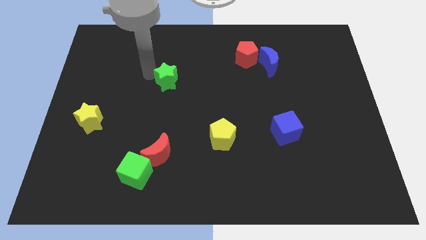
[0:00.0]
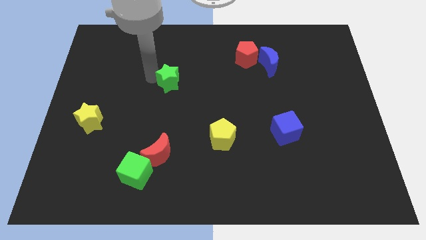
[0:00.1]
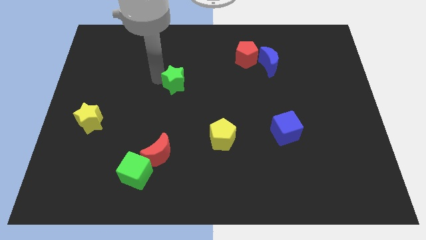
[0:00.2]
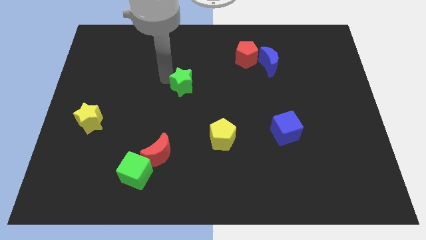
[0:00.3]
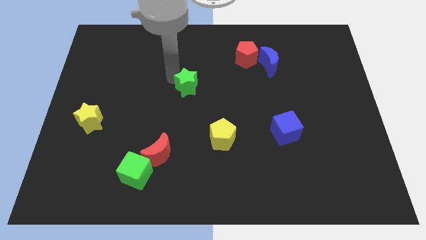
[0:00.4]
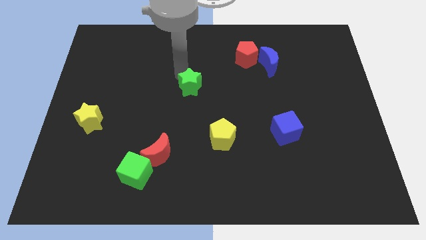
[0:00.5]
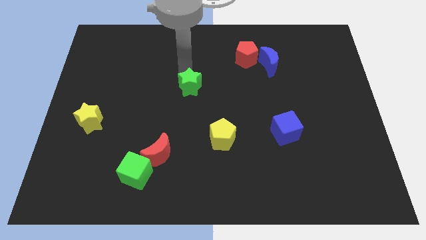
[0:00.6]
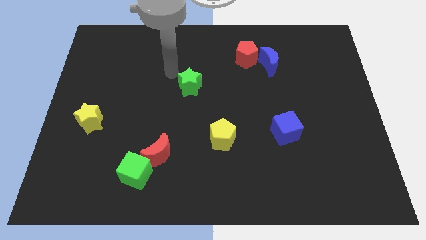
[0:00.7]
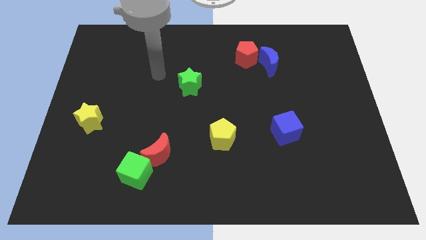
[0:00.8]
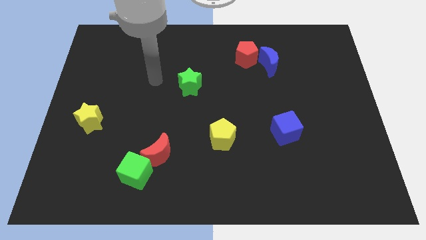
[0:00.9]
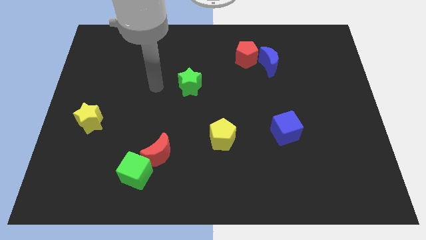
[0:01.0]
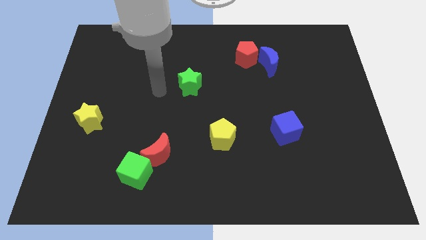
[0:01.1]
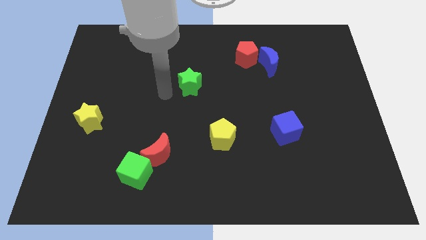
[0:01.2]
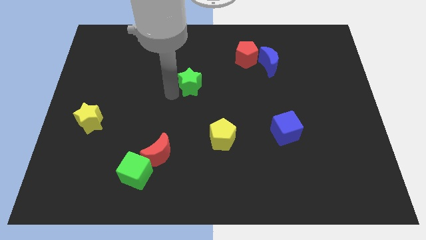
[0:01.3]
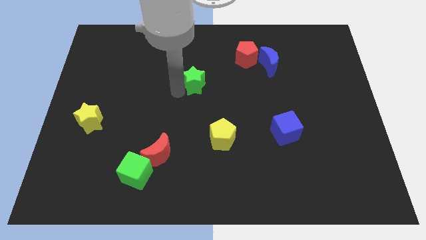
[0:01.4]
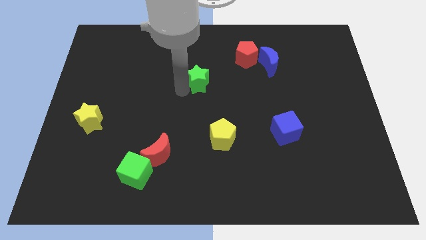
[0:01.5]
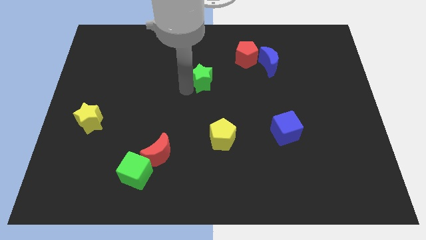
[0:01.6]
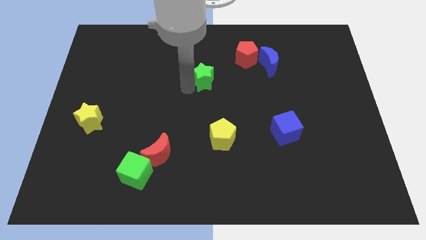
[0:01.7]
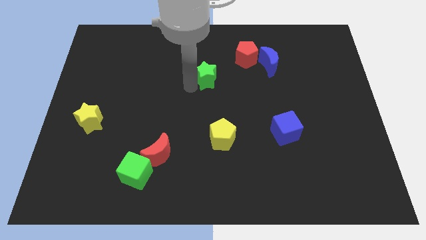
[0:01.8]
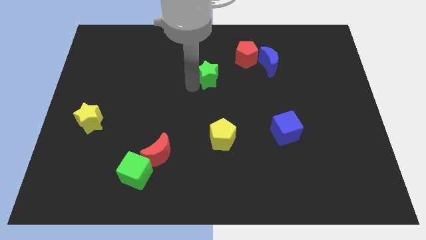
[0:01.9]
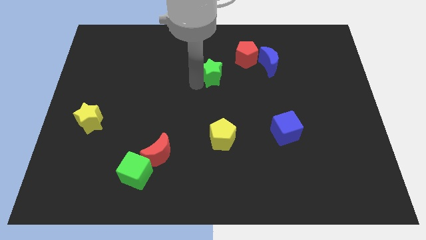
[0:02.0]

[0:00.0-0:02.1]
move the green star towards the red pentagon

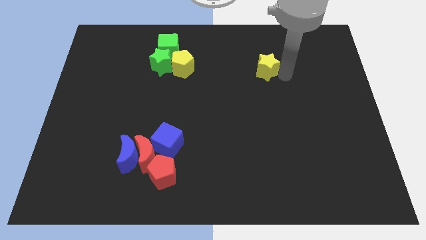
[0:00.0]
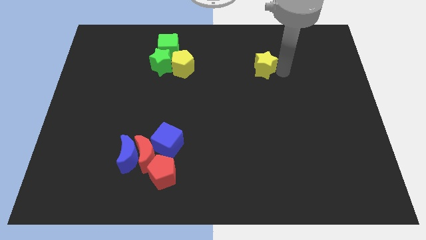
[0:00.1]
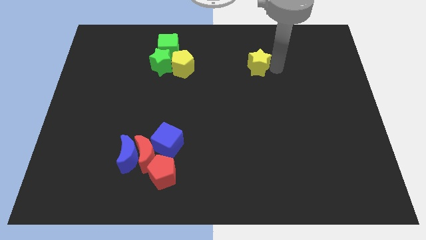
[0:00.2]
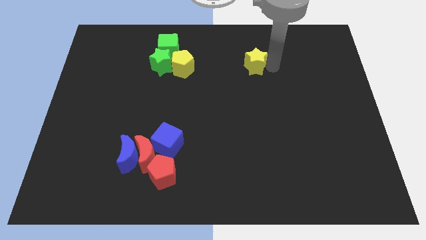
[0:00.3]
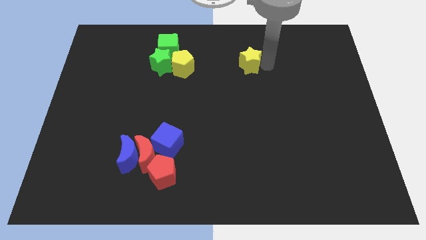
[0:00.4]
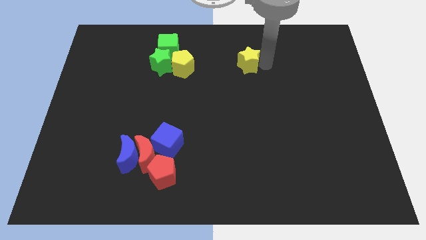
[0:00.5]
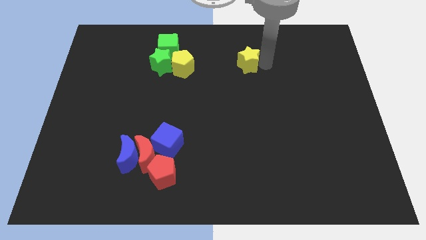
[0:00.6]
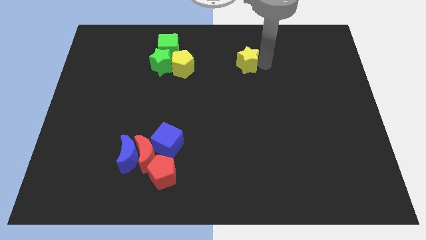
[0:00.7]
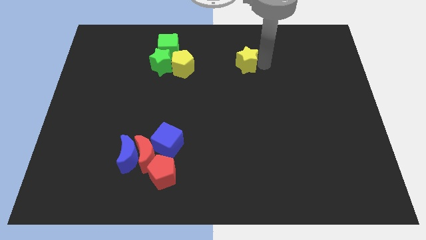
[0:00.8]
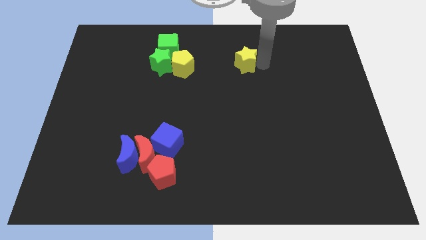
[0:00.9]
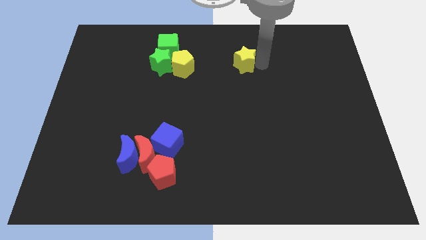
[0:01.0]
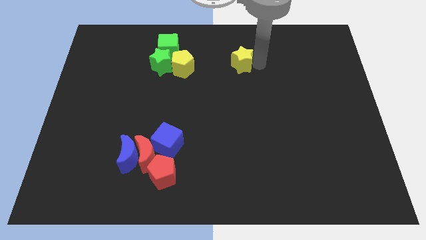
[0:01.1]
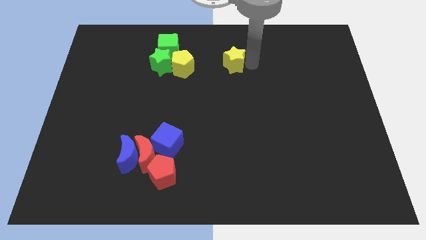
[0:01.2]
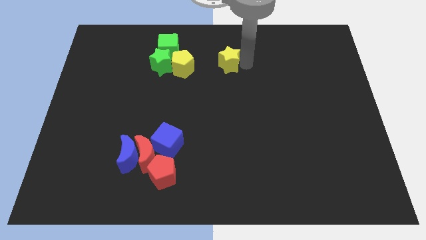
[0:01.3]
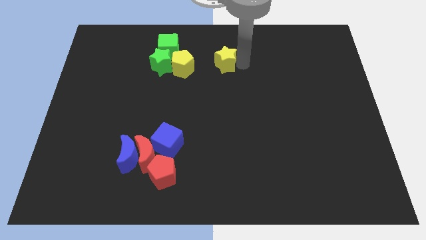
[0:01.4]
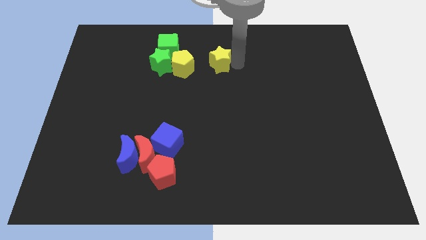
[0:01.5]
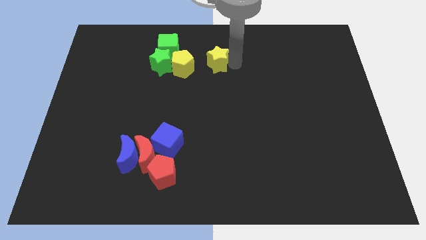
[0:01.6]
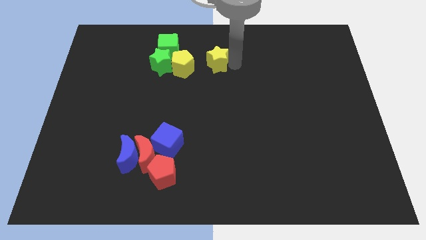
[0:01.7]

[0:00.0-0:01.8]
move the yellow star right to the yellow pentagon

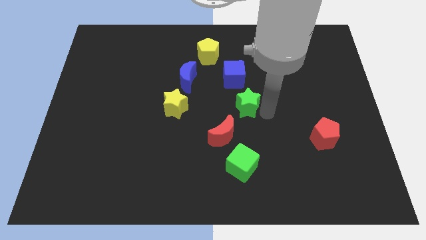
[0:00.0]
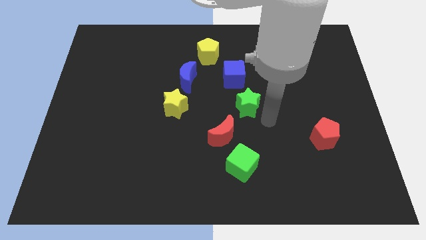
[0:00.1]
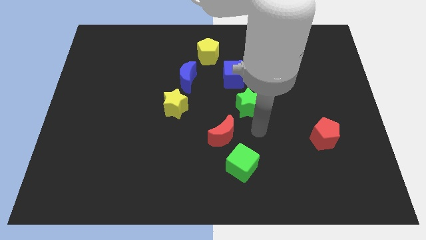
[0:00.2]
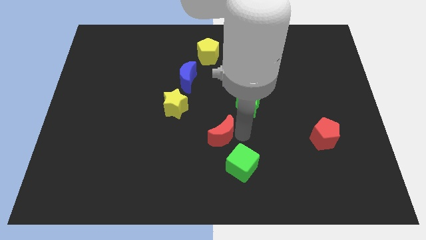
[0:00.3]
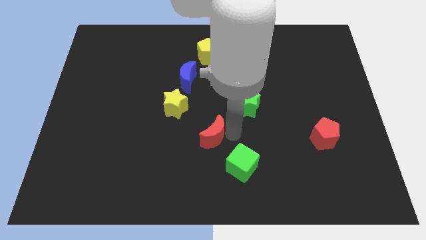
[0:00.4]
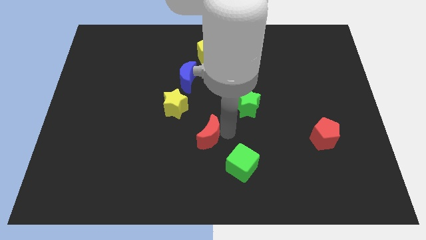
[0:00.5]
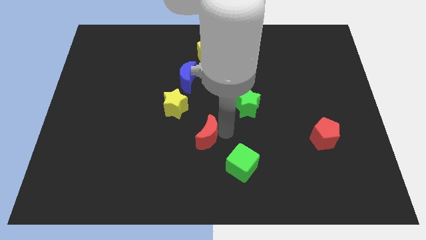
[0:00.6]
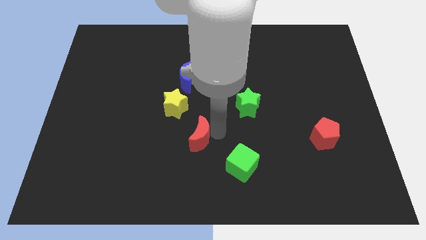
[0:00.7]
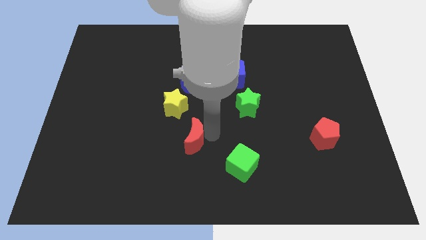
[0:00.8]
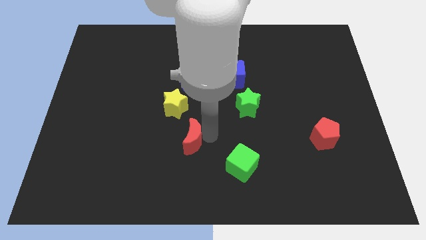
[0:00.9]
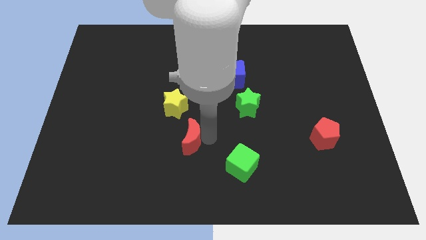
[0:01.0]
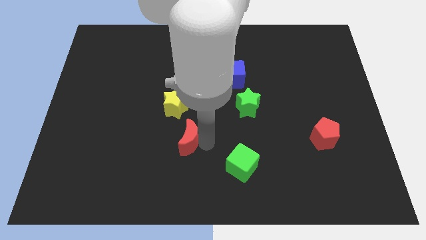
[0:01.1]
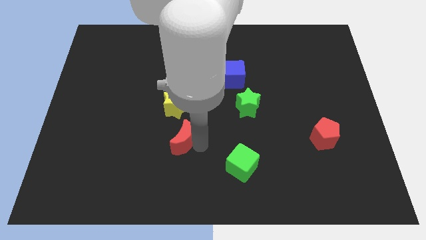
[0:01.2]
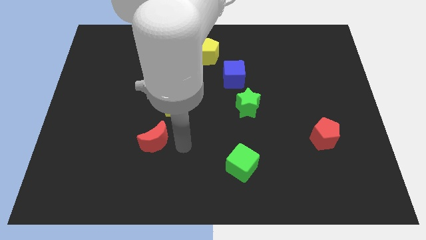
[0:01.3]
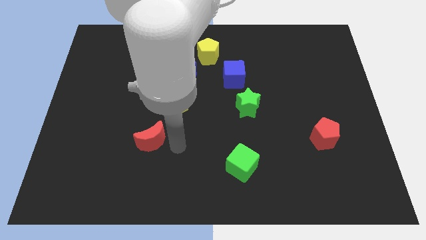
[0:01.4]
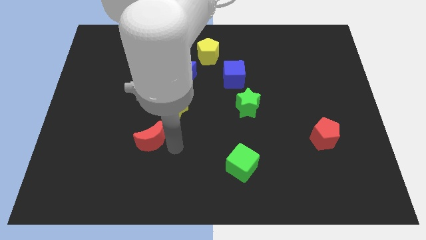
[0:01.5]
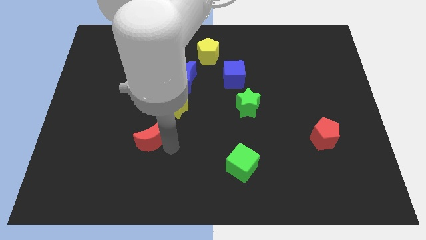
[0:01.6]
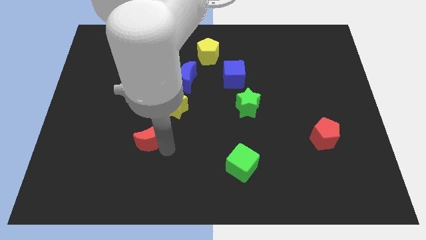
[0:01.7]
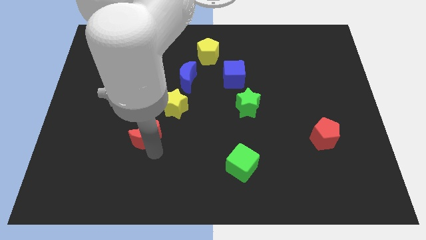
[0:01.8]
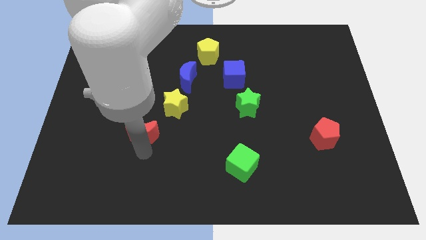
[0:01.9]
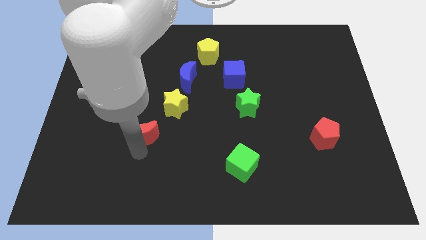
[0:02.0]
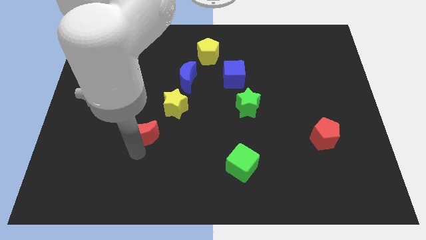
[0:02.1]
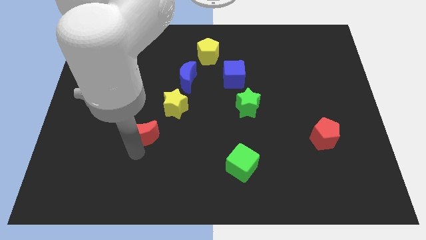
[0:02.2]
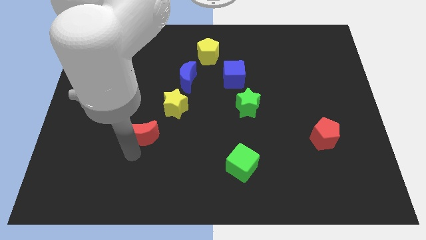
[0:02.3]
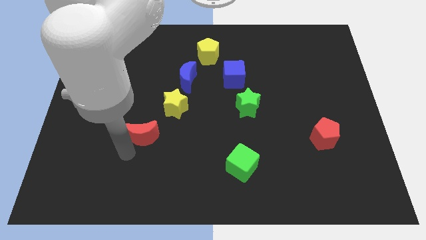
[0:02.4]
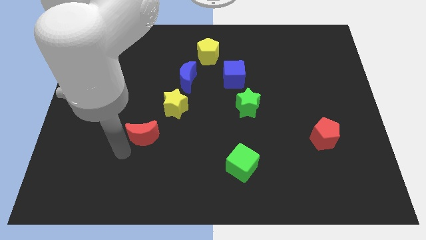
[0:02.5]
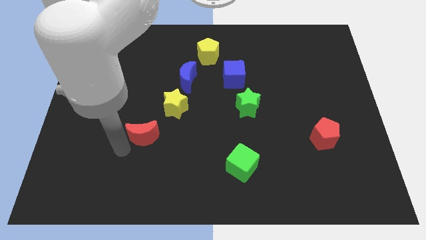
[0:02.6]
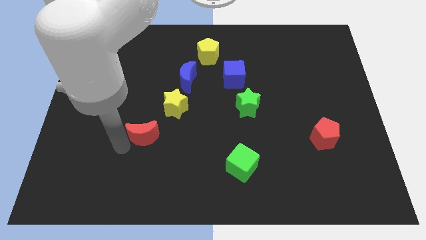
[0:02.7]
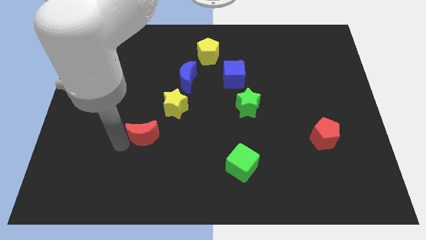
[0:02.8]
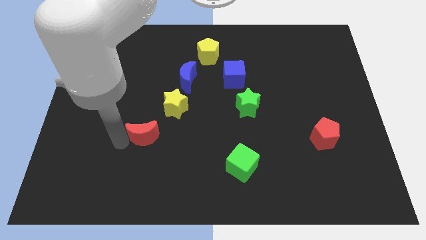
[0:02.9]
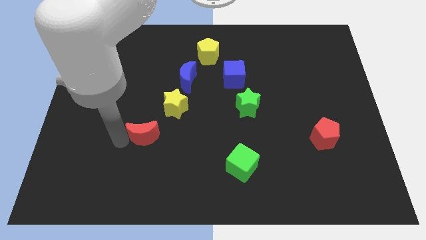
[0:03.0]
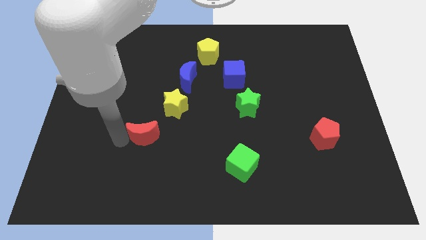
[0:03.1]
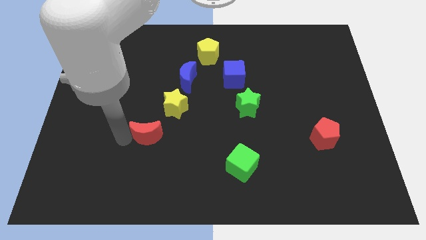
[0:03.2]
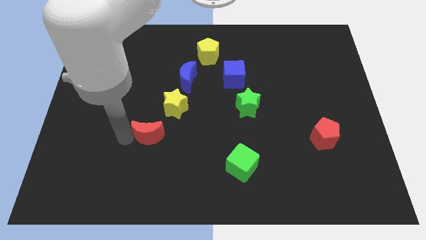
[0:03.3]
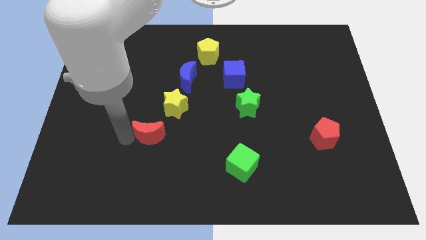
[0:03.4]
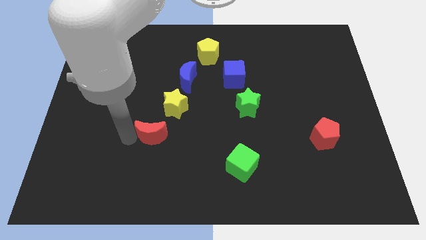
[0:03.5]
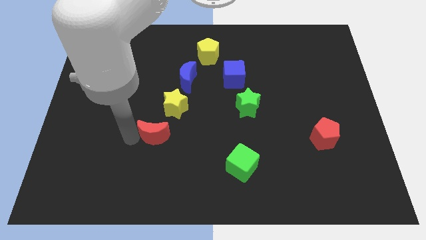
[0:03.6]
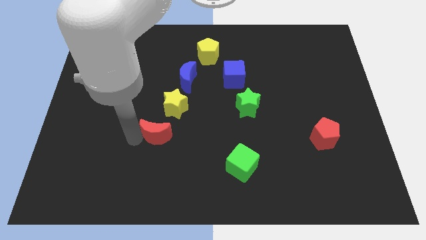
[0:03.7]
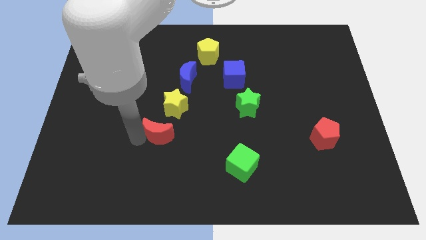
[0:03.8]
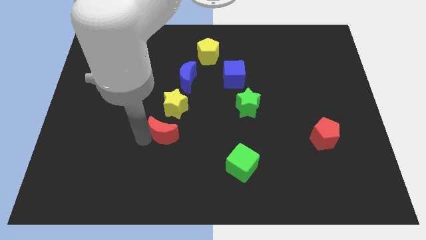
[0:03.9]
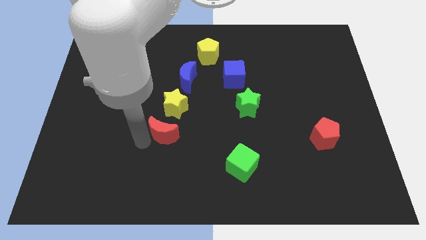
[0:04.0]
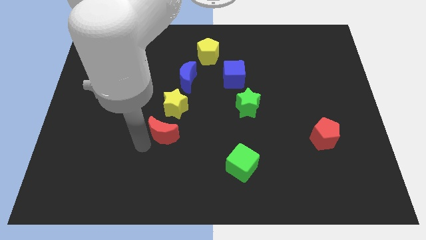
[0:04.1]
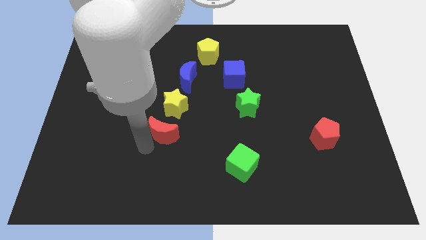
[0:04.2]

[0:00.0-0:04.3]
place the red crescent below the yellow star

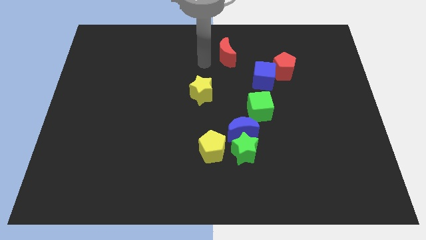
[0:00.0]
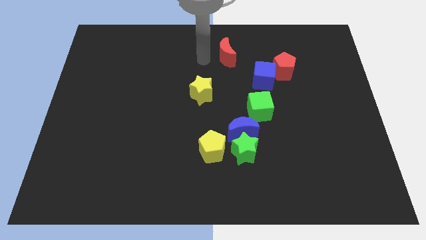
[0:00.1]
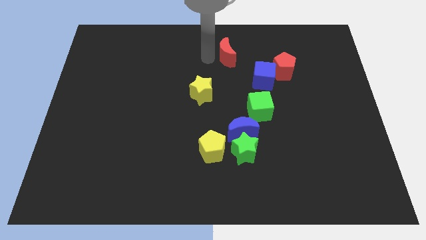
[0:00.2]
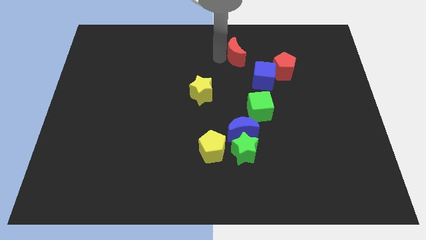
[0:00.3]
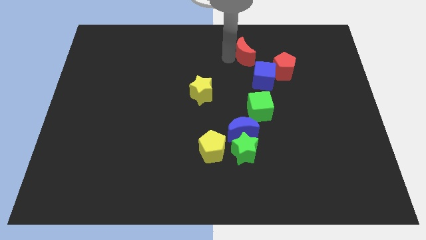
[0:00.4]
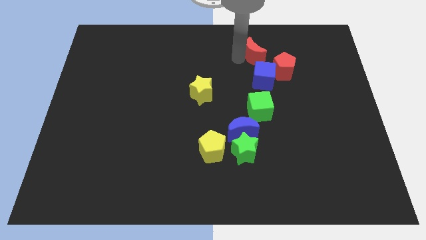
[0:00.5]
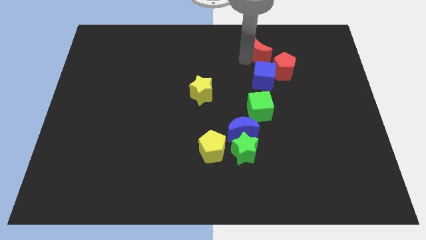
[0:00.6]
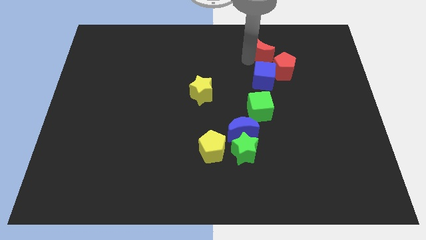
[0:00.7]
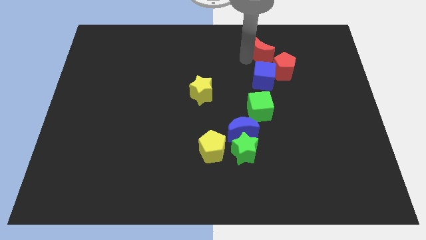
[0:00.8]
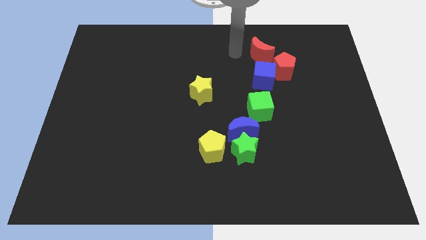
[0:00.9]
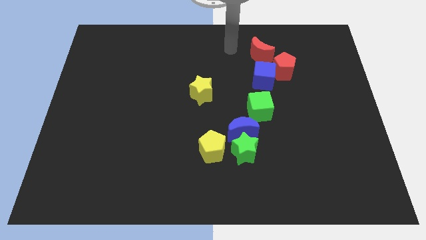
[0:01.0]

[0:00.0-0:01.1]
push the red crescent to the top of the blue cube
